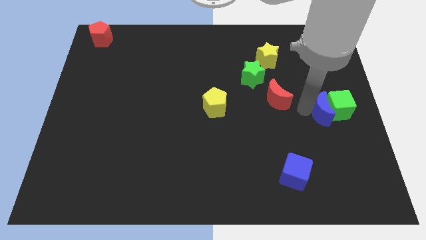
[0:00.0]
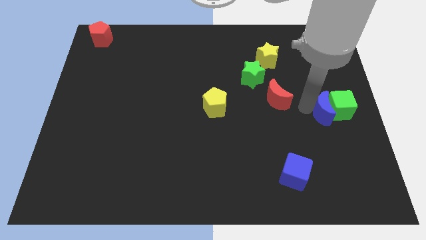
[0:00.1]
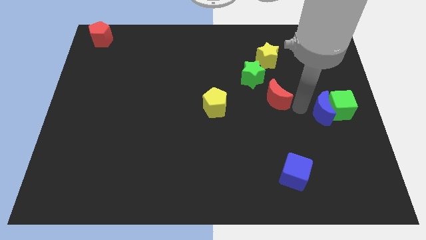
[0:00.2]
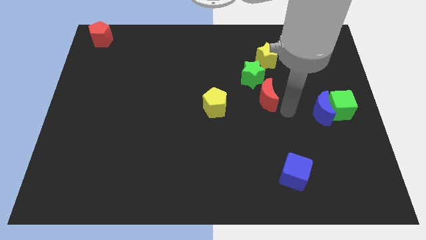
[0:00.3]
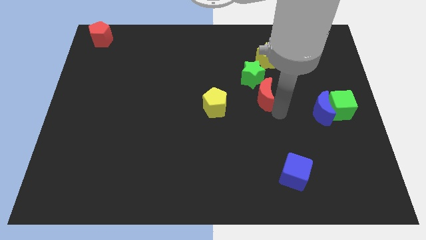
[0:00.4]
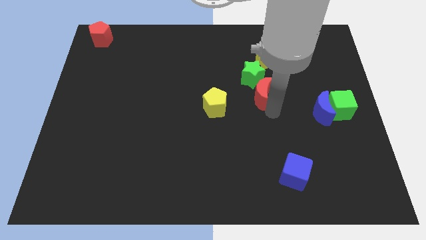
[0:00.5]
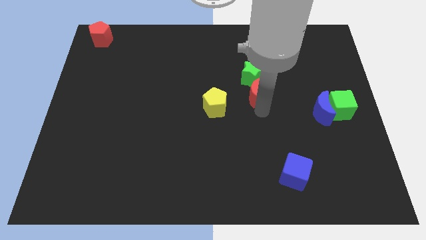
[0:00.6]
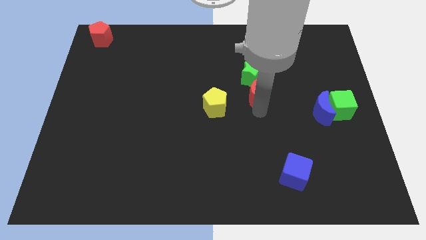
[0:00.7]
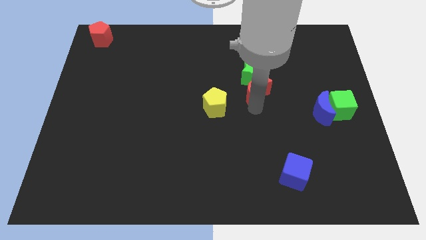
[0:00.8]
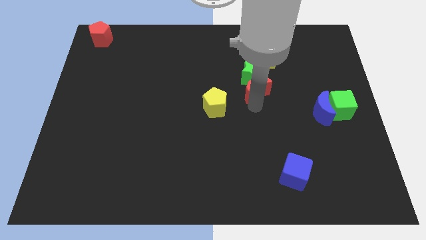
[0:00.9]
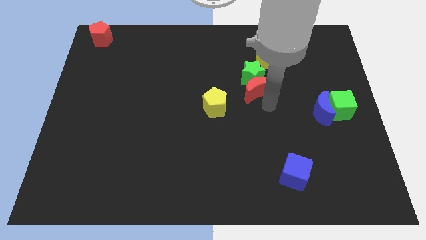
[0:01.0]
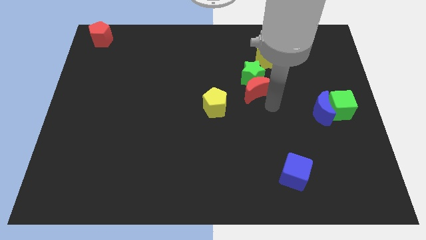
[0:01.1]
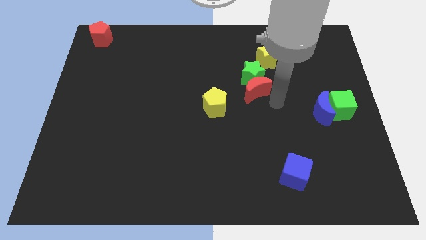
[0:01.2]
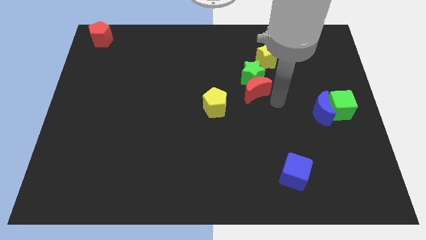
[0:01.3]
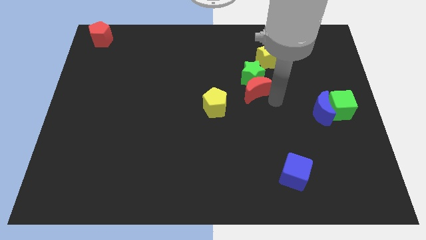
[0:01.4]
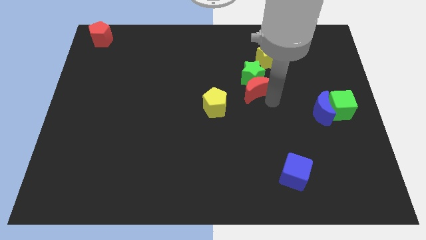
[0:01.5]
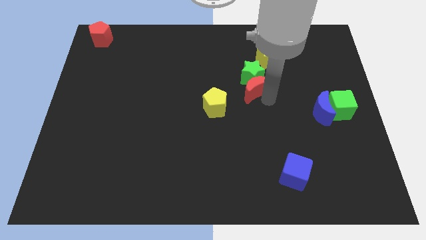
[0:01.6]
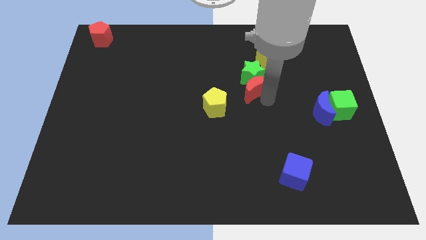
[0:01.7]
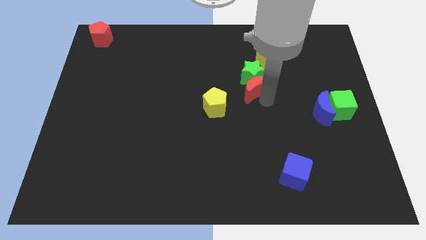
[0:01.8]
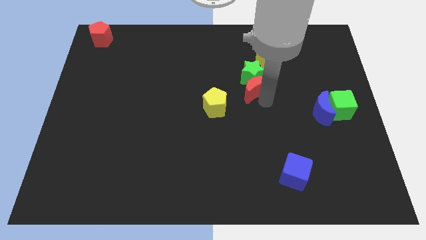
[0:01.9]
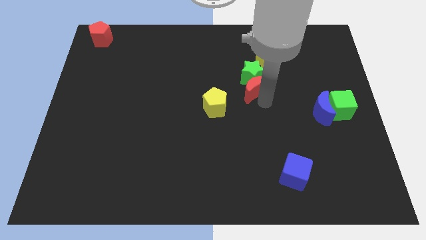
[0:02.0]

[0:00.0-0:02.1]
move the red moon down to the green star

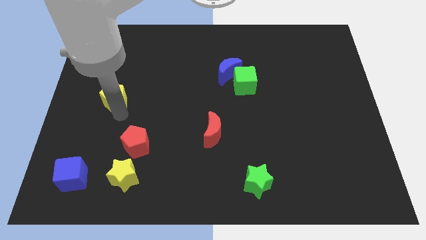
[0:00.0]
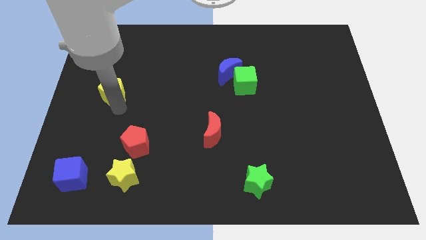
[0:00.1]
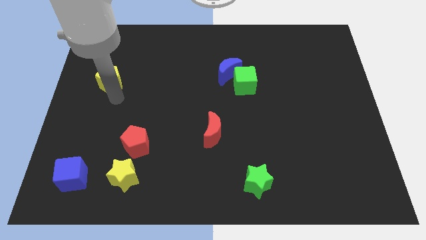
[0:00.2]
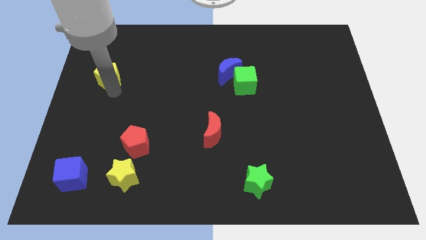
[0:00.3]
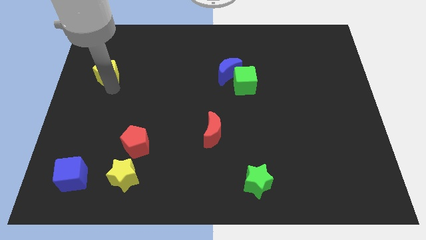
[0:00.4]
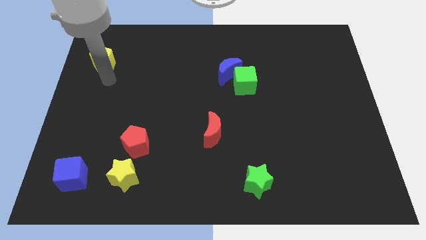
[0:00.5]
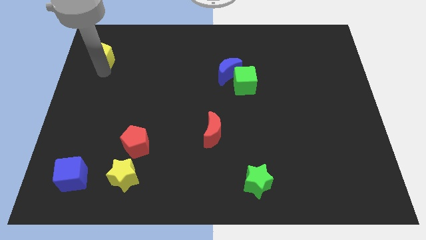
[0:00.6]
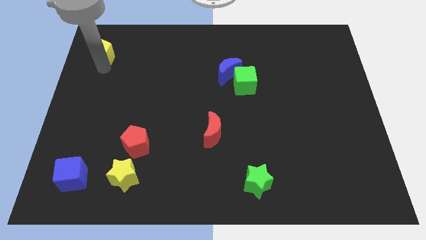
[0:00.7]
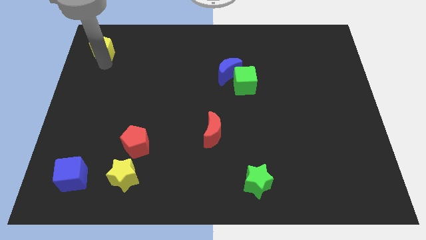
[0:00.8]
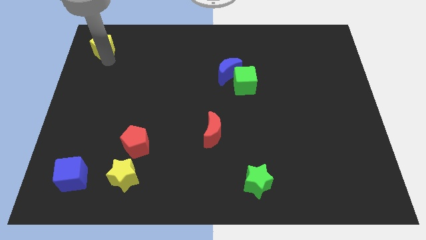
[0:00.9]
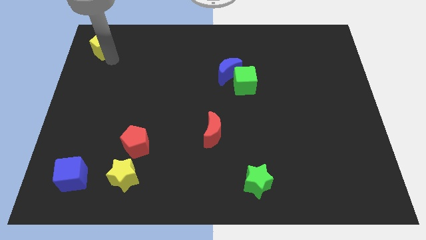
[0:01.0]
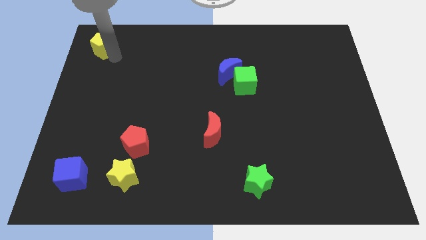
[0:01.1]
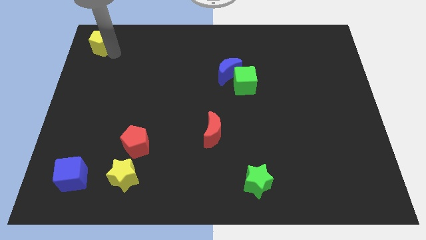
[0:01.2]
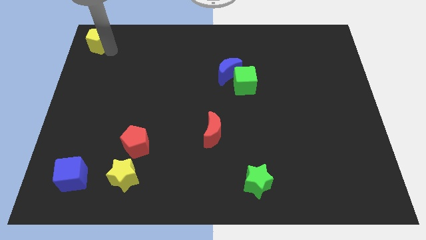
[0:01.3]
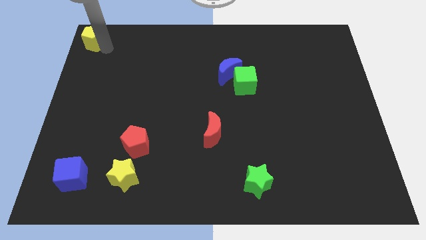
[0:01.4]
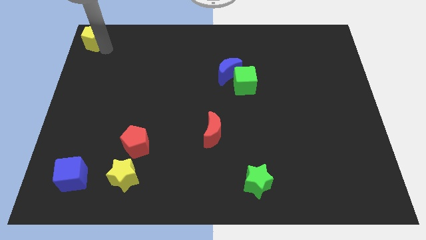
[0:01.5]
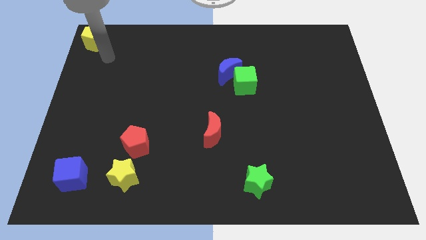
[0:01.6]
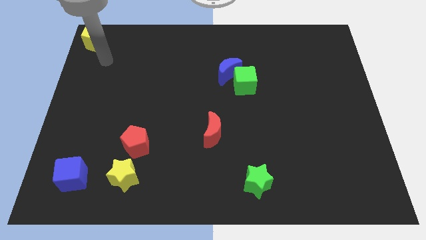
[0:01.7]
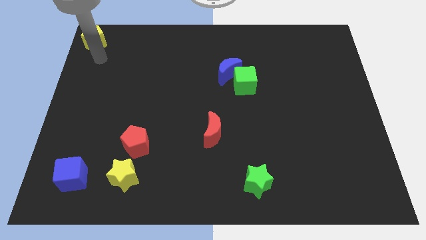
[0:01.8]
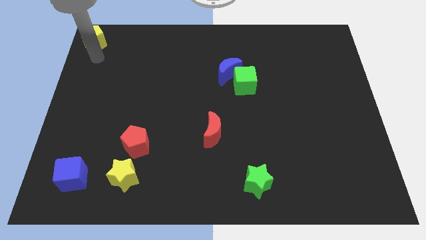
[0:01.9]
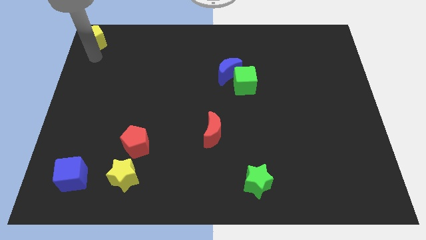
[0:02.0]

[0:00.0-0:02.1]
slide yellow pentagon to the top left

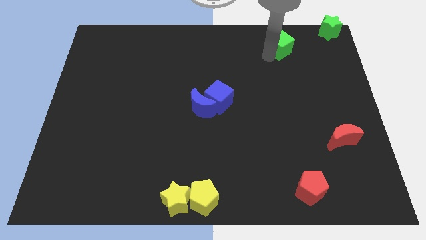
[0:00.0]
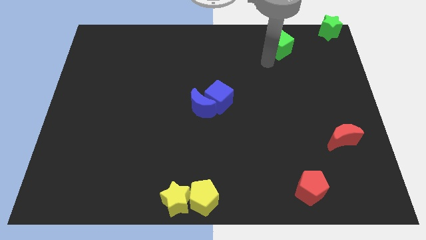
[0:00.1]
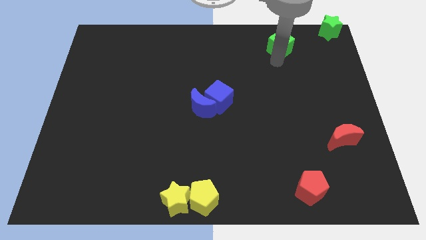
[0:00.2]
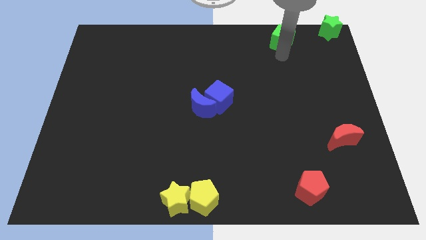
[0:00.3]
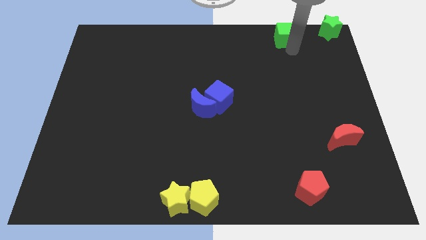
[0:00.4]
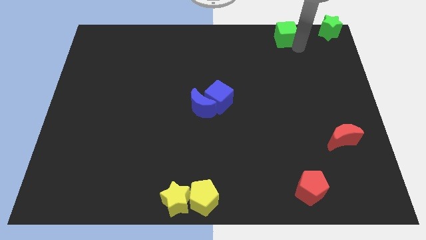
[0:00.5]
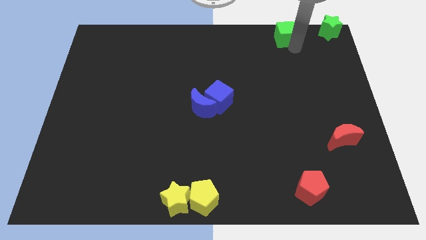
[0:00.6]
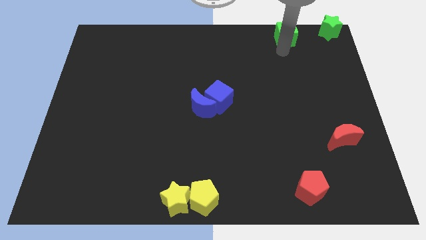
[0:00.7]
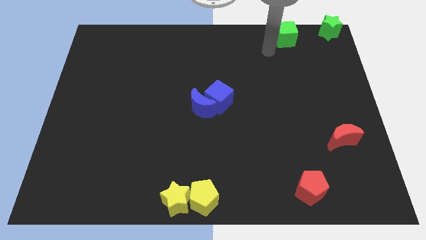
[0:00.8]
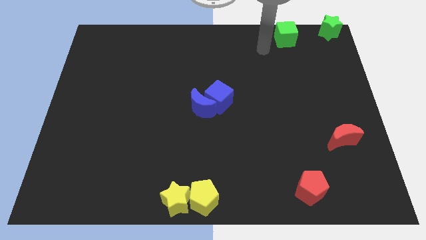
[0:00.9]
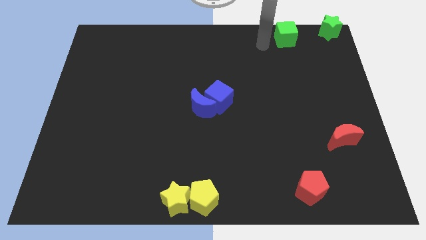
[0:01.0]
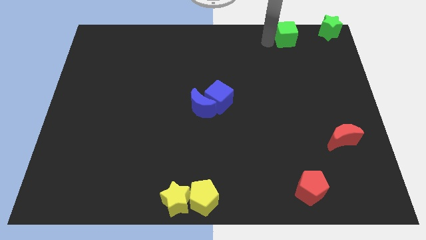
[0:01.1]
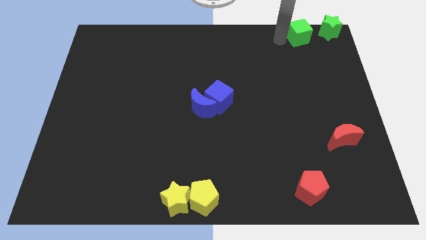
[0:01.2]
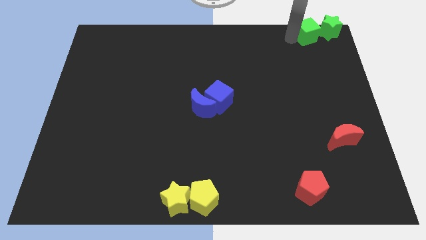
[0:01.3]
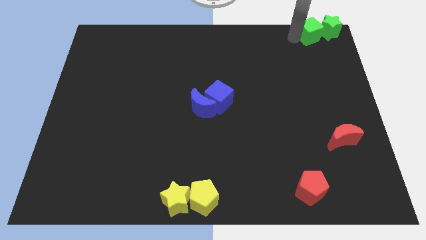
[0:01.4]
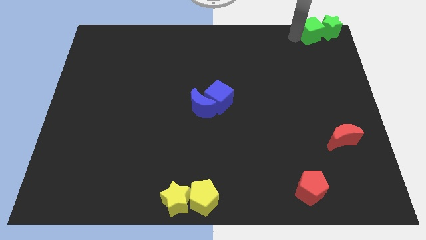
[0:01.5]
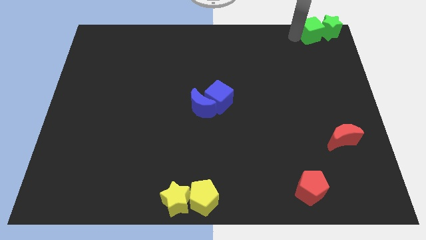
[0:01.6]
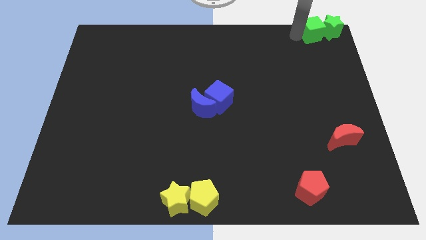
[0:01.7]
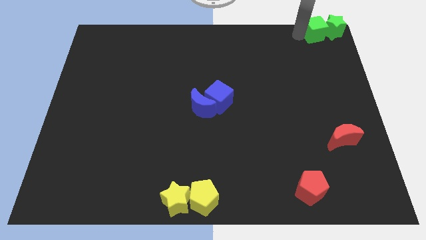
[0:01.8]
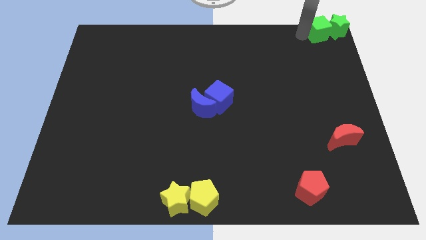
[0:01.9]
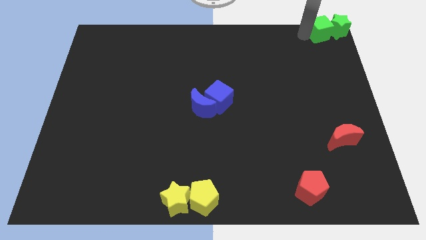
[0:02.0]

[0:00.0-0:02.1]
push the green cube into the green star

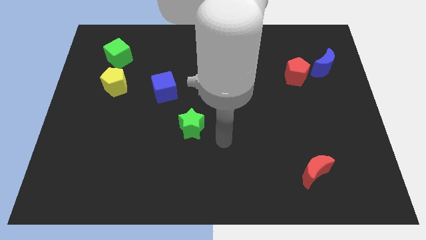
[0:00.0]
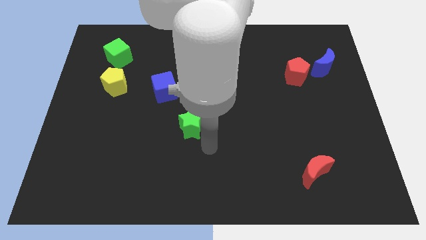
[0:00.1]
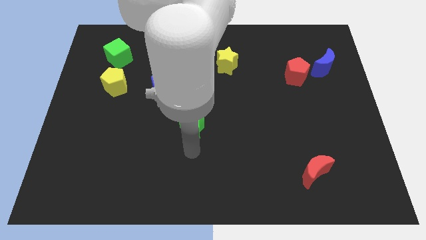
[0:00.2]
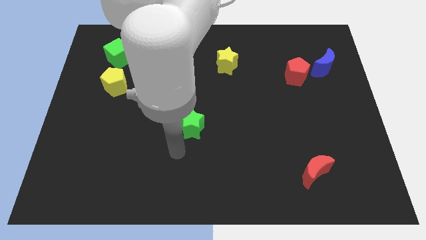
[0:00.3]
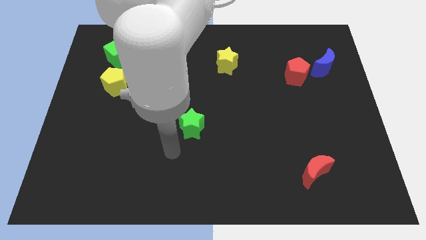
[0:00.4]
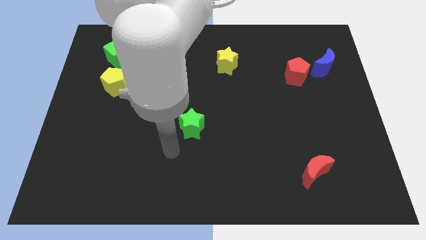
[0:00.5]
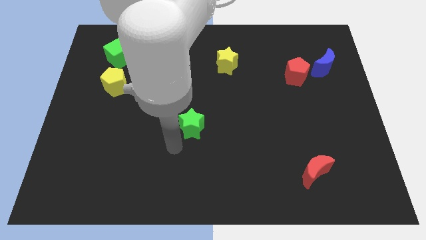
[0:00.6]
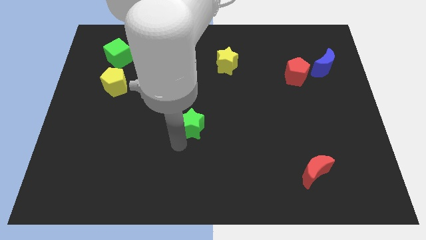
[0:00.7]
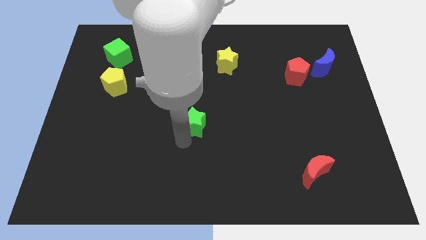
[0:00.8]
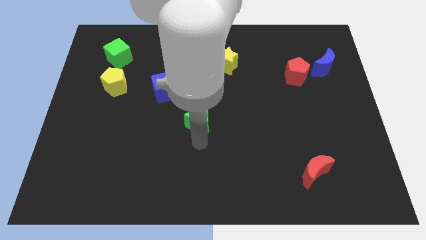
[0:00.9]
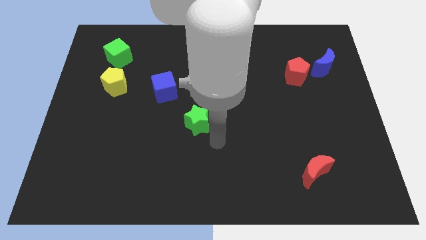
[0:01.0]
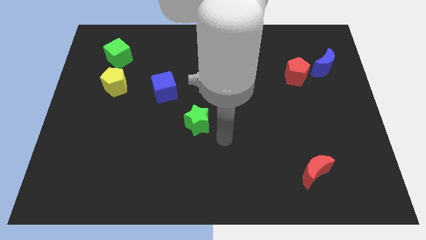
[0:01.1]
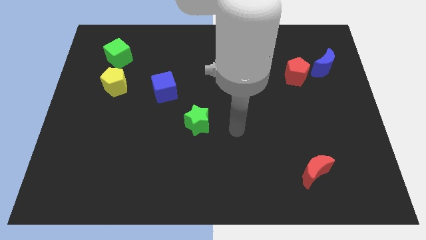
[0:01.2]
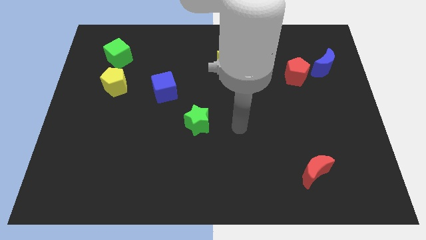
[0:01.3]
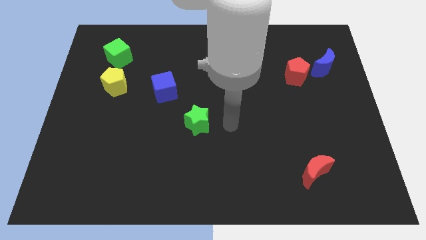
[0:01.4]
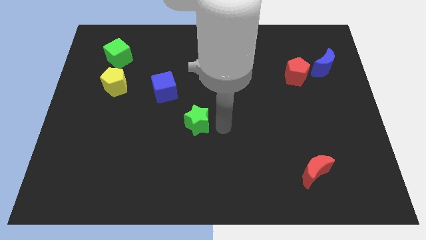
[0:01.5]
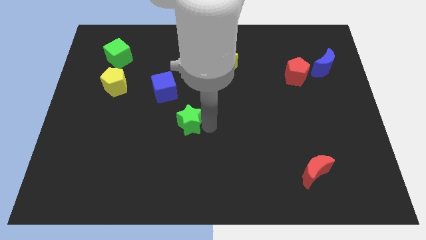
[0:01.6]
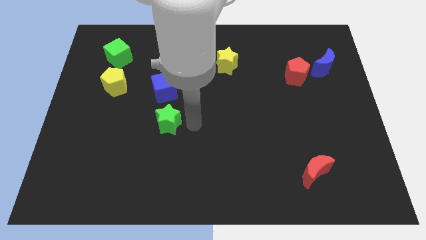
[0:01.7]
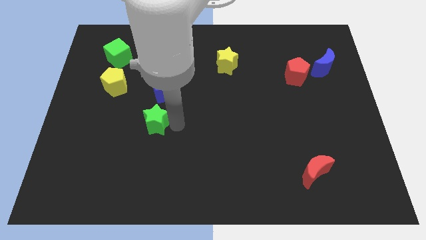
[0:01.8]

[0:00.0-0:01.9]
slightly push the green star

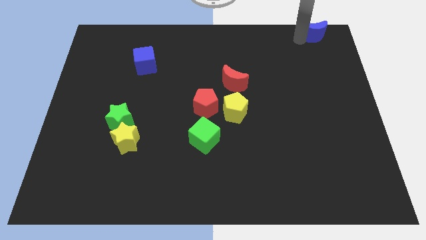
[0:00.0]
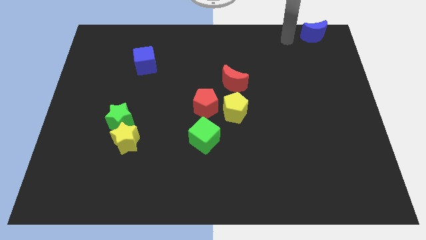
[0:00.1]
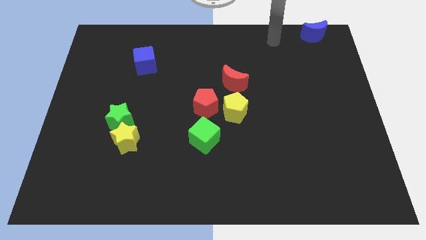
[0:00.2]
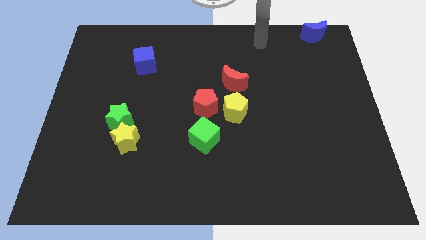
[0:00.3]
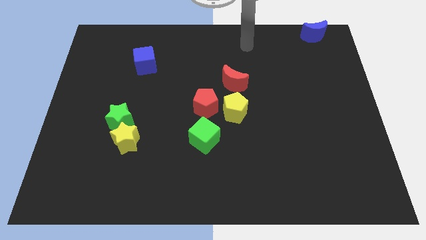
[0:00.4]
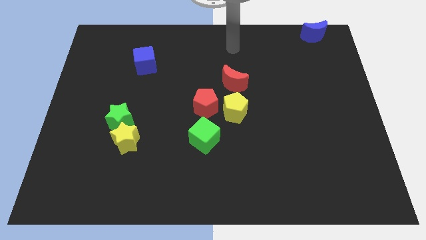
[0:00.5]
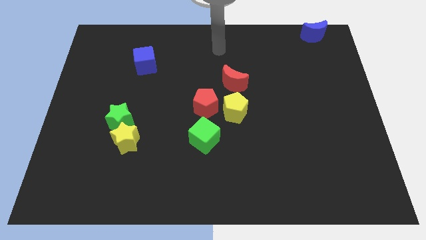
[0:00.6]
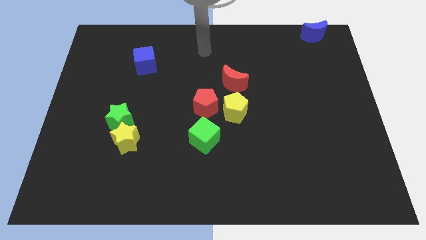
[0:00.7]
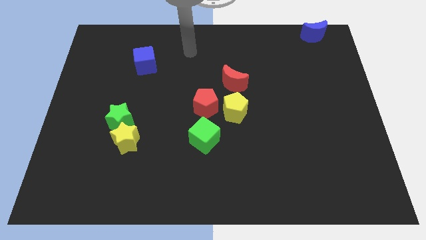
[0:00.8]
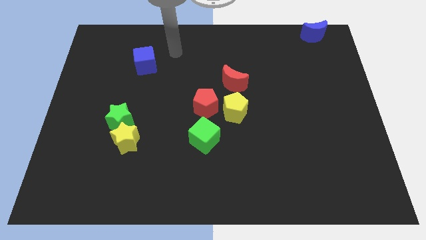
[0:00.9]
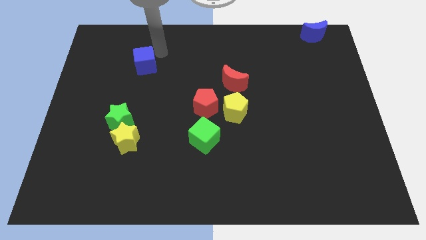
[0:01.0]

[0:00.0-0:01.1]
move your arm towards the blue cube
